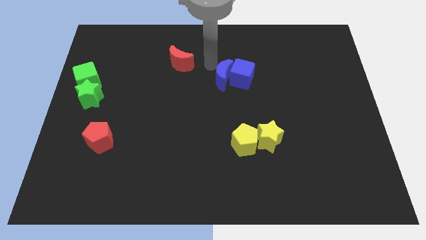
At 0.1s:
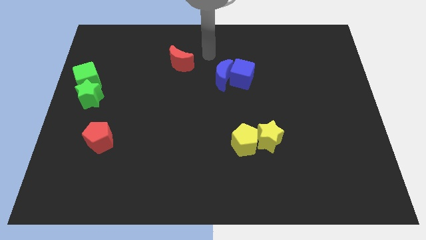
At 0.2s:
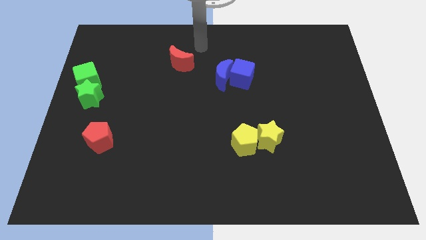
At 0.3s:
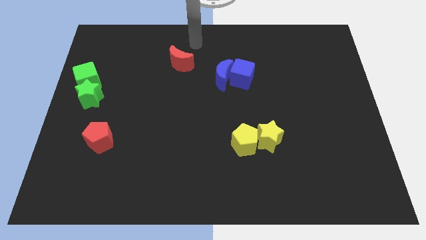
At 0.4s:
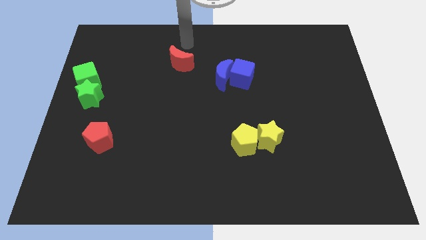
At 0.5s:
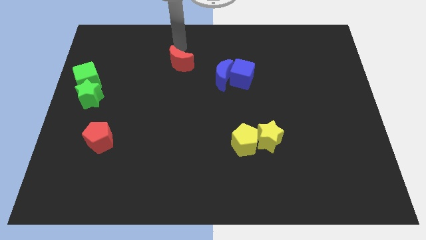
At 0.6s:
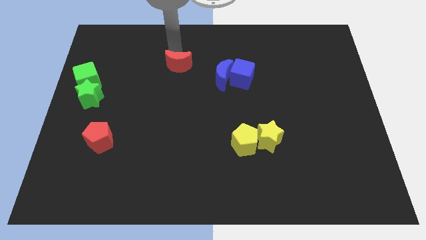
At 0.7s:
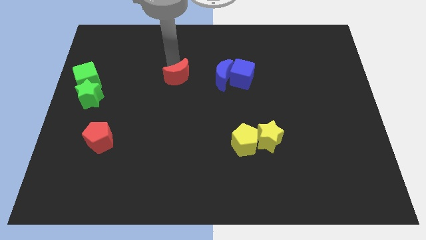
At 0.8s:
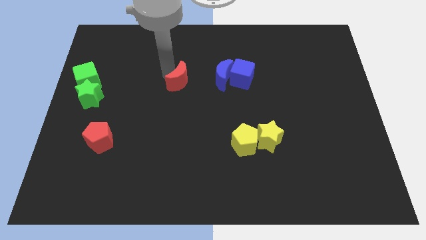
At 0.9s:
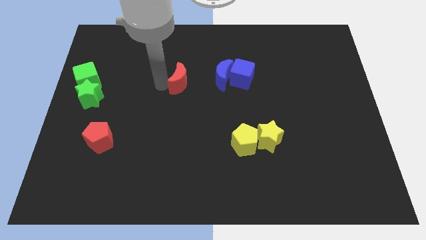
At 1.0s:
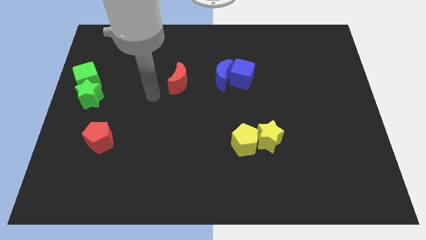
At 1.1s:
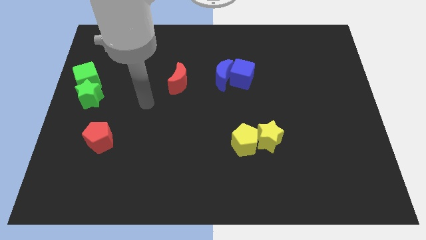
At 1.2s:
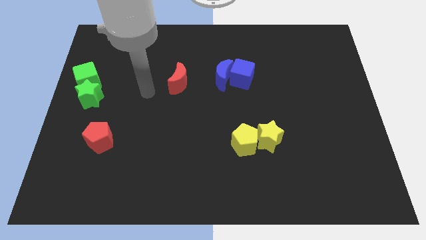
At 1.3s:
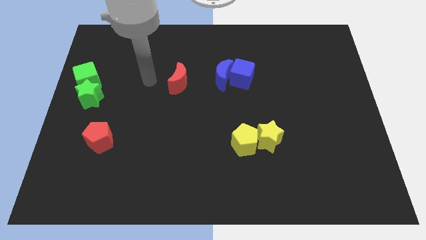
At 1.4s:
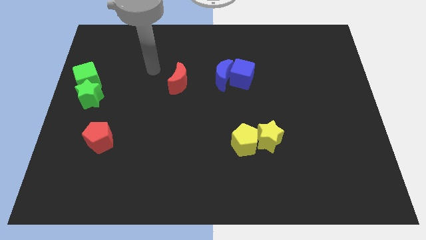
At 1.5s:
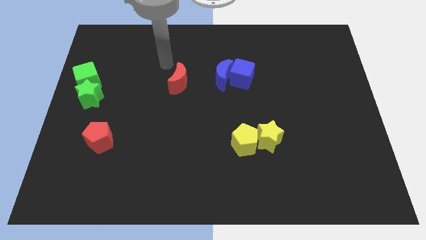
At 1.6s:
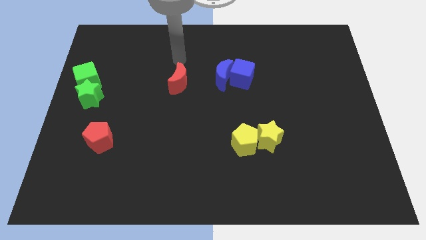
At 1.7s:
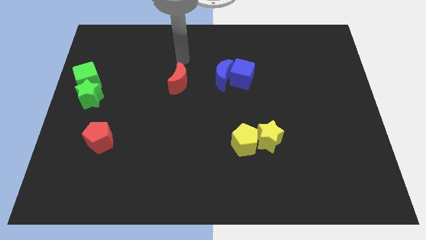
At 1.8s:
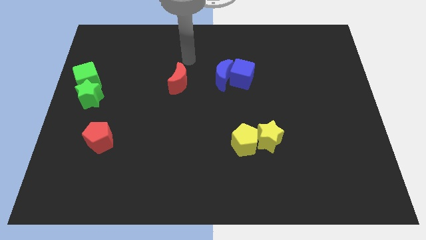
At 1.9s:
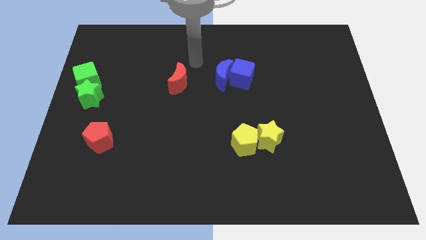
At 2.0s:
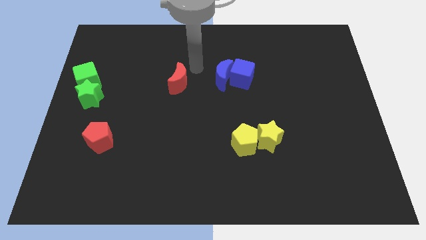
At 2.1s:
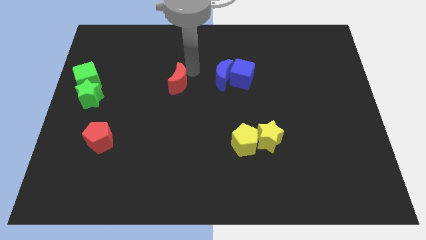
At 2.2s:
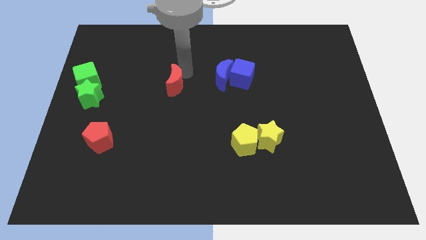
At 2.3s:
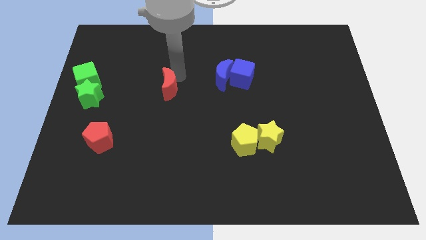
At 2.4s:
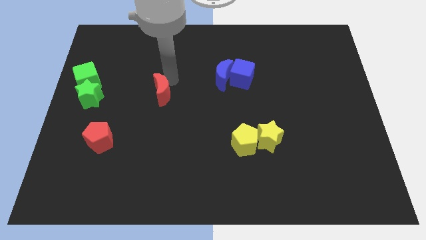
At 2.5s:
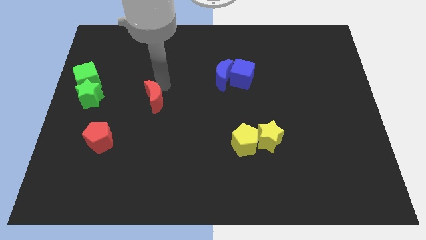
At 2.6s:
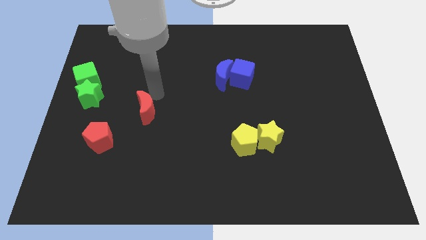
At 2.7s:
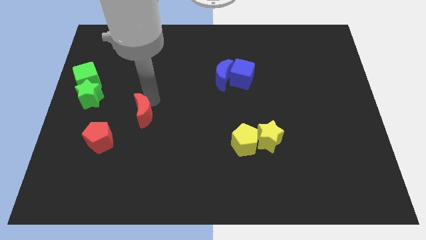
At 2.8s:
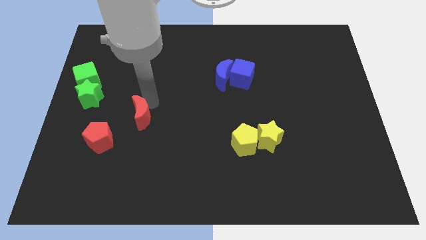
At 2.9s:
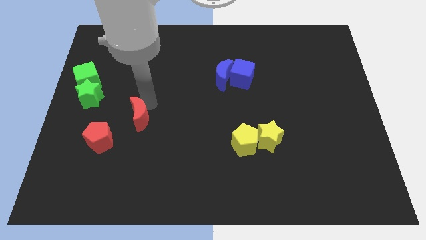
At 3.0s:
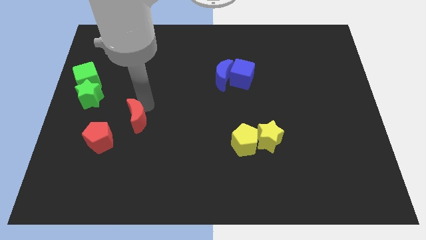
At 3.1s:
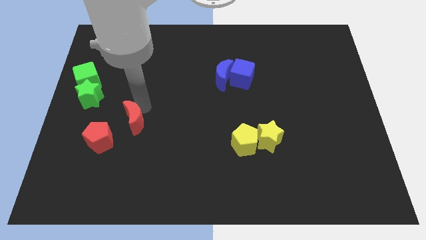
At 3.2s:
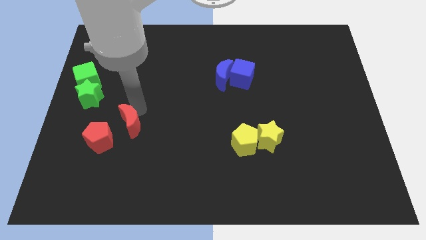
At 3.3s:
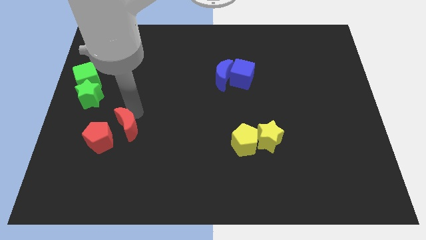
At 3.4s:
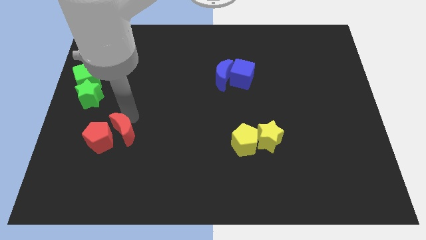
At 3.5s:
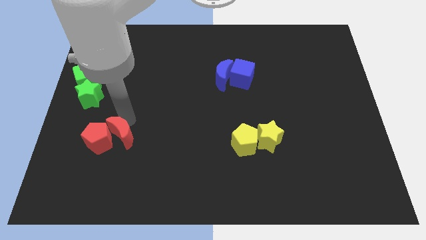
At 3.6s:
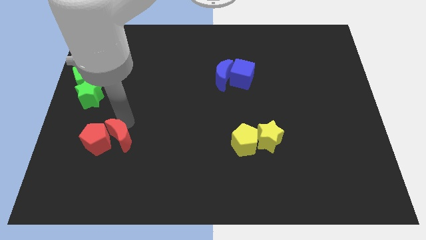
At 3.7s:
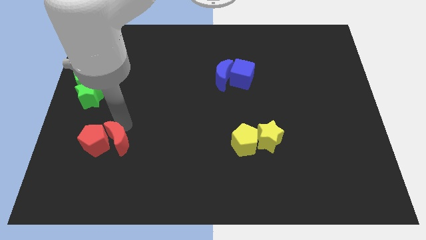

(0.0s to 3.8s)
push the red crescent into the red pentagon

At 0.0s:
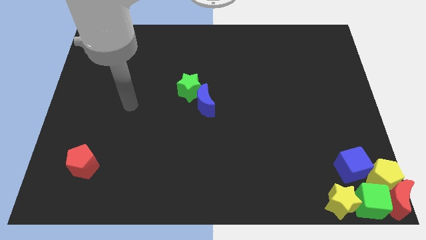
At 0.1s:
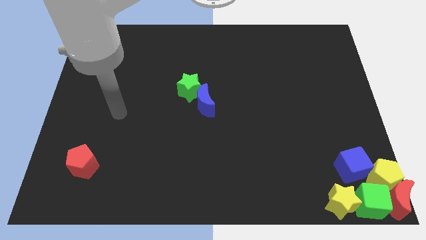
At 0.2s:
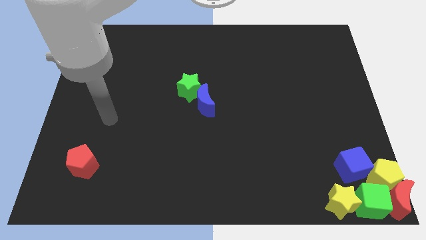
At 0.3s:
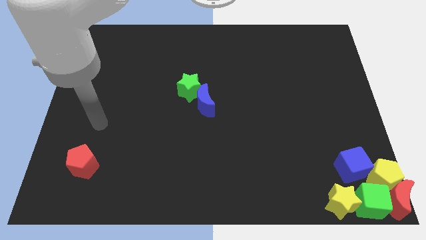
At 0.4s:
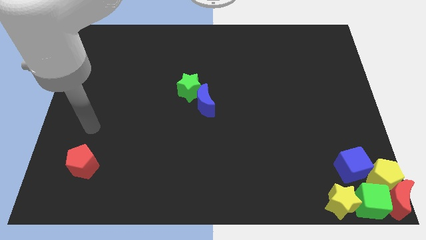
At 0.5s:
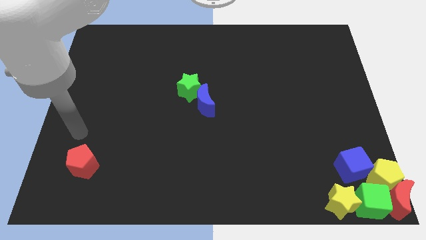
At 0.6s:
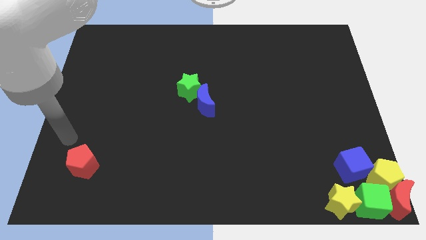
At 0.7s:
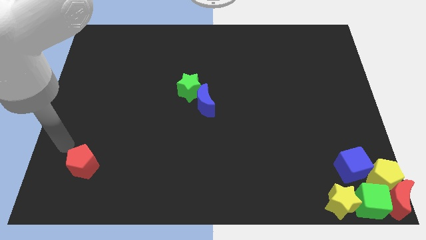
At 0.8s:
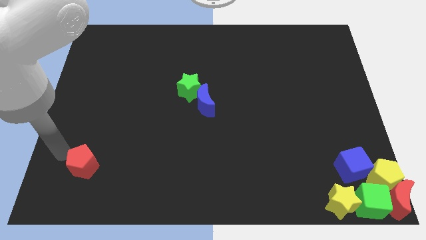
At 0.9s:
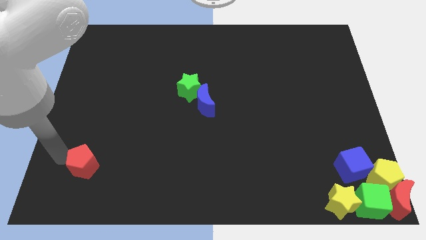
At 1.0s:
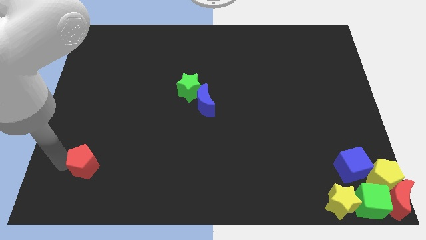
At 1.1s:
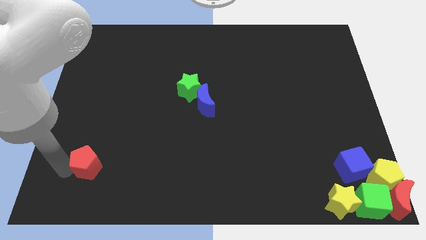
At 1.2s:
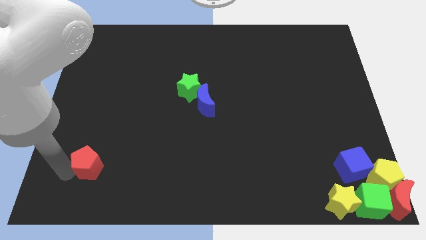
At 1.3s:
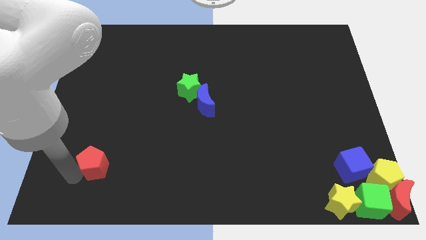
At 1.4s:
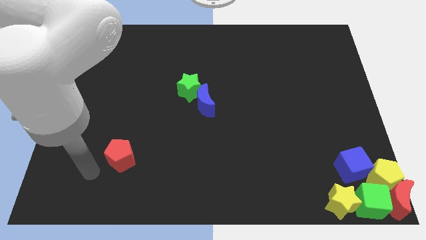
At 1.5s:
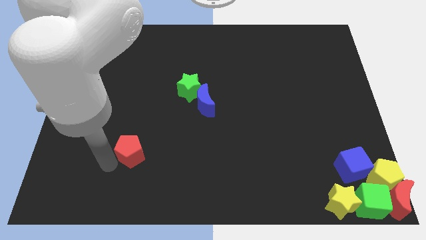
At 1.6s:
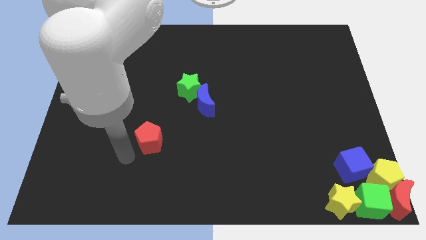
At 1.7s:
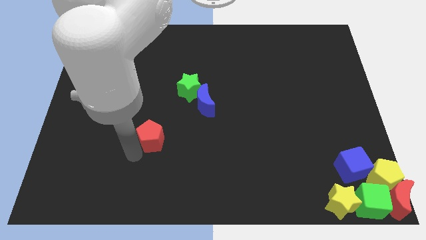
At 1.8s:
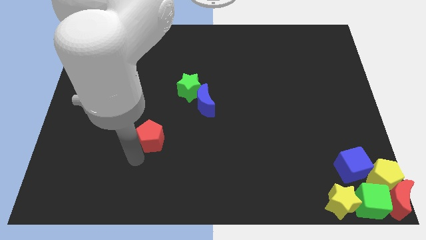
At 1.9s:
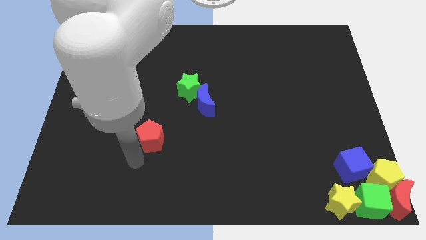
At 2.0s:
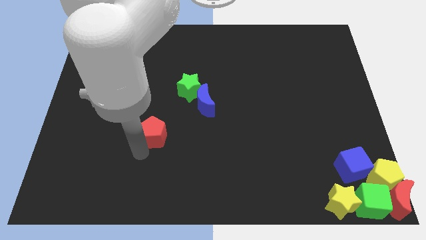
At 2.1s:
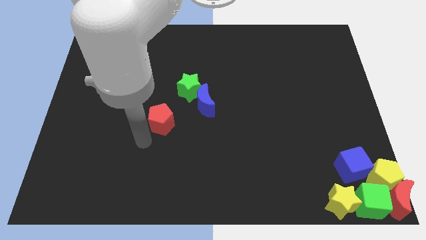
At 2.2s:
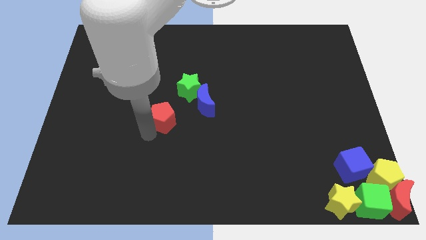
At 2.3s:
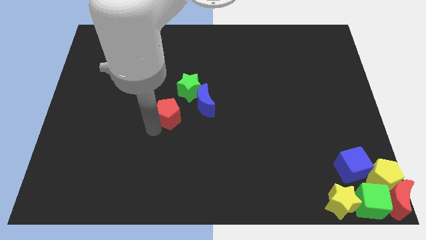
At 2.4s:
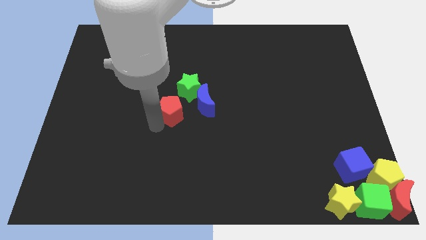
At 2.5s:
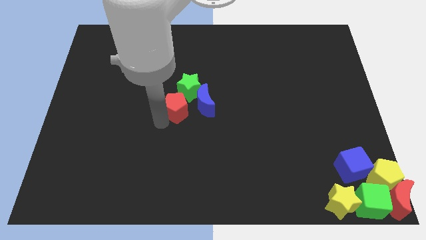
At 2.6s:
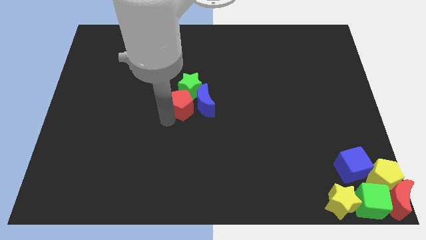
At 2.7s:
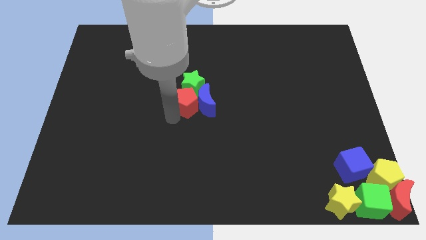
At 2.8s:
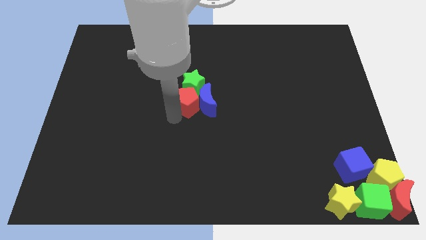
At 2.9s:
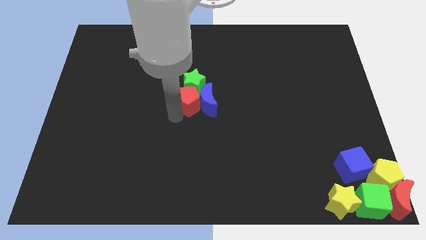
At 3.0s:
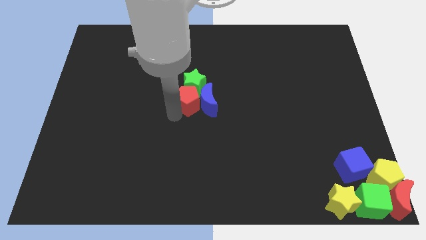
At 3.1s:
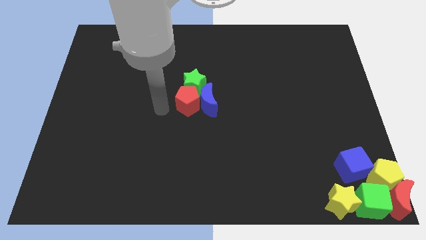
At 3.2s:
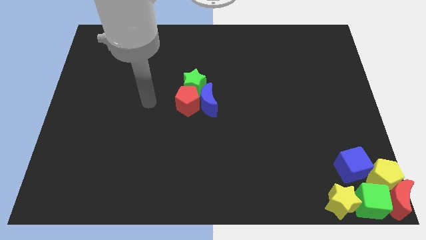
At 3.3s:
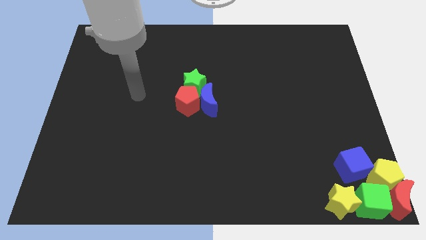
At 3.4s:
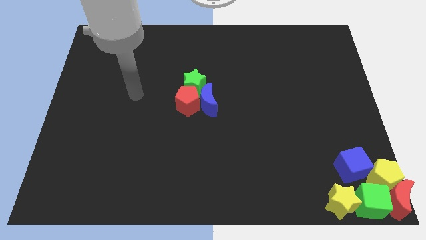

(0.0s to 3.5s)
push the red pentagon to the left side of the blue moon

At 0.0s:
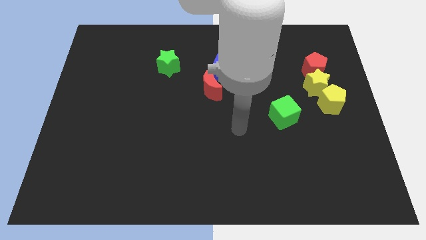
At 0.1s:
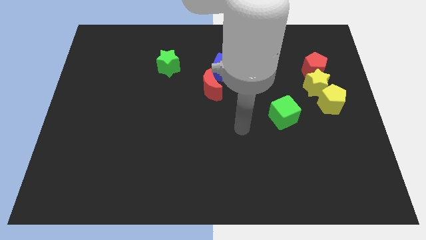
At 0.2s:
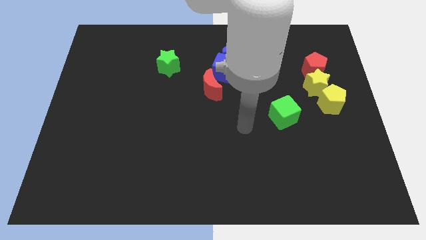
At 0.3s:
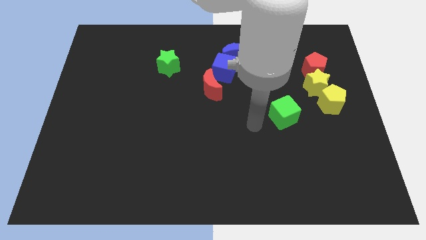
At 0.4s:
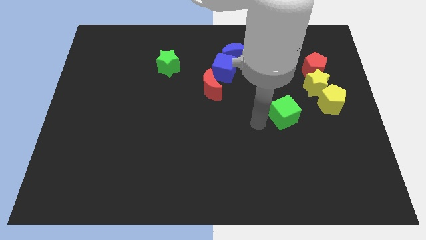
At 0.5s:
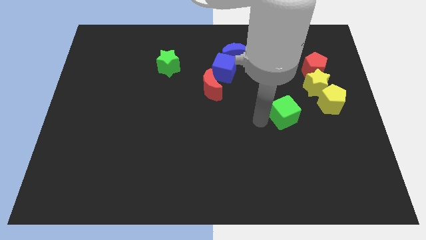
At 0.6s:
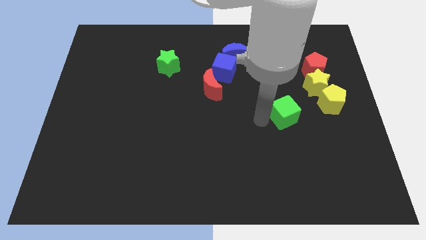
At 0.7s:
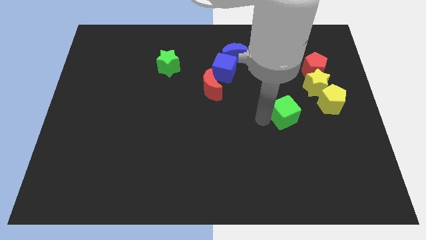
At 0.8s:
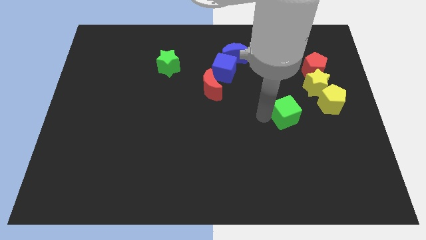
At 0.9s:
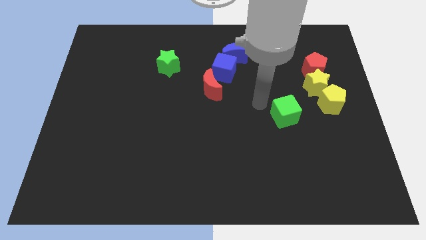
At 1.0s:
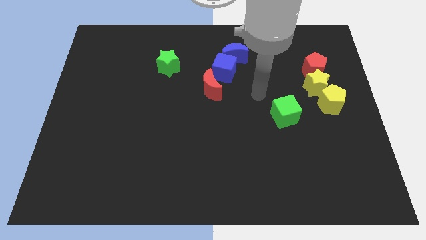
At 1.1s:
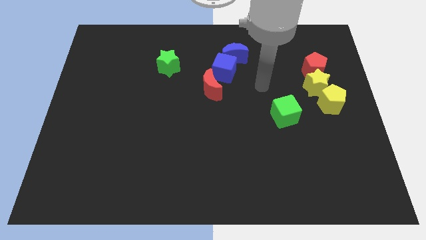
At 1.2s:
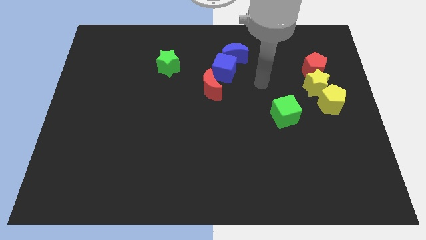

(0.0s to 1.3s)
tap the green cube

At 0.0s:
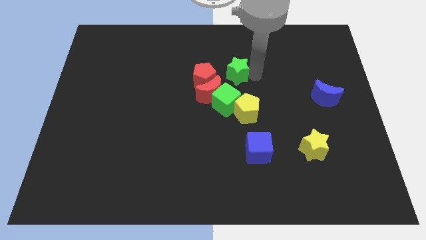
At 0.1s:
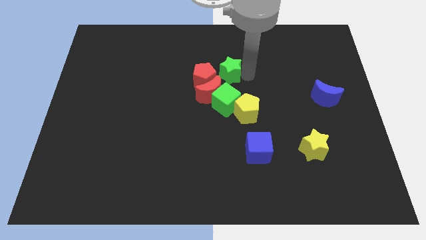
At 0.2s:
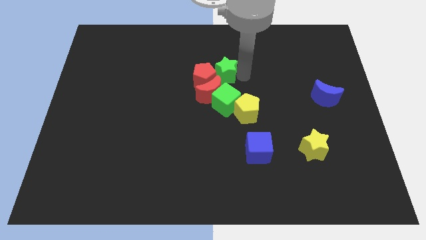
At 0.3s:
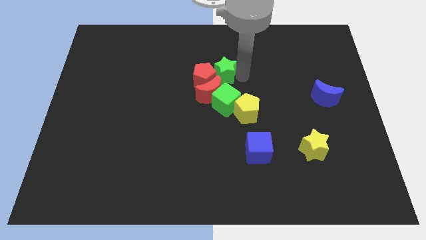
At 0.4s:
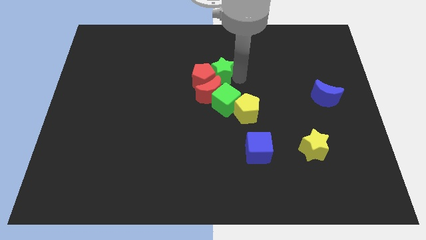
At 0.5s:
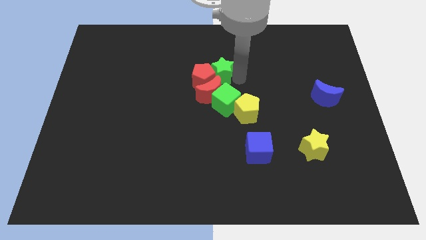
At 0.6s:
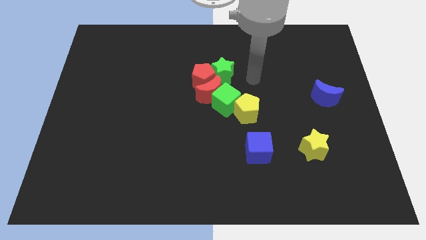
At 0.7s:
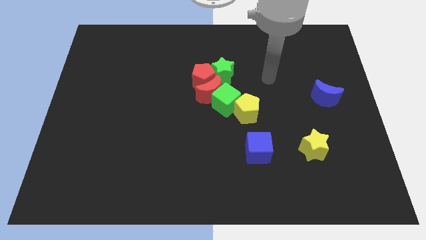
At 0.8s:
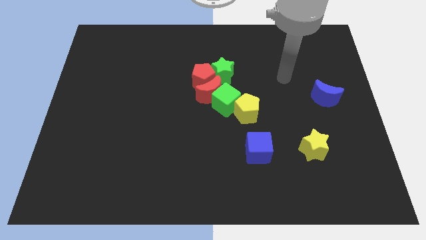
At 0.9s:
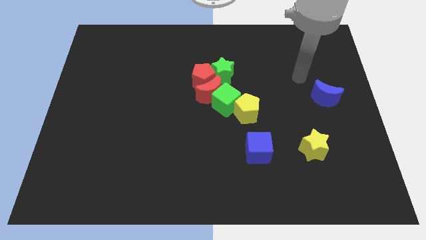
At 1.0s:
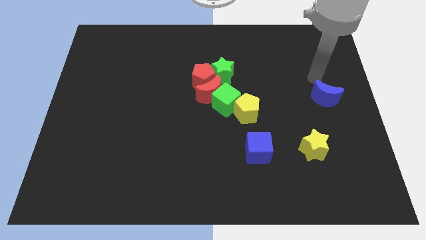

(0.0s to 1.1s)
slightly push the green star into the red pentagon
